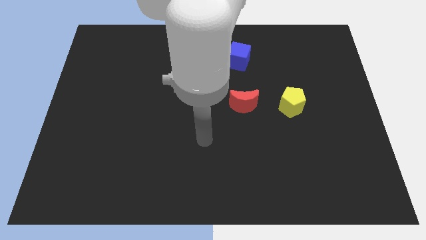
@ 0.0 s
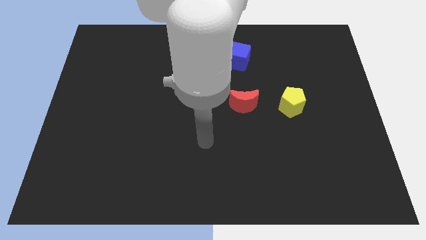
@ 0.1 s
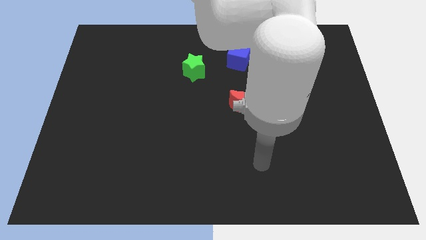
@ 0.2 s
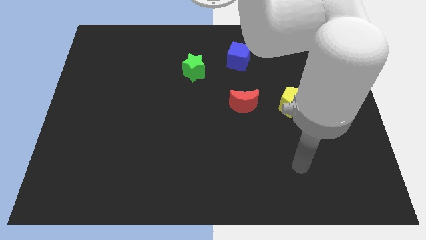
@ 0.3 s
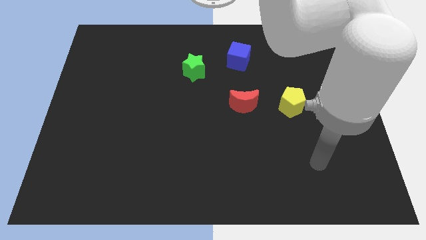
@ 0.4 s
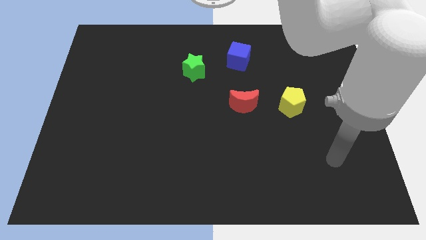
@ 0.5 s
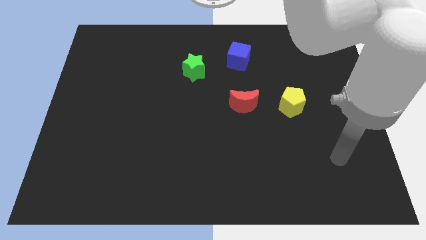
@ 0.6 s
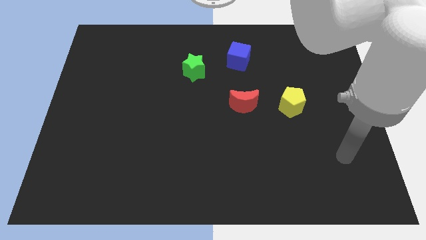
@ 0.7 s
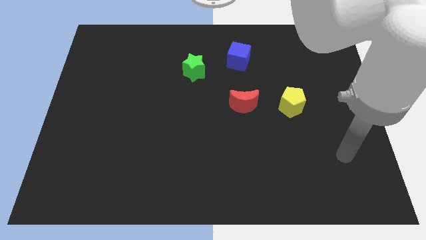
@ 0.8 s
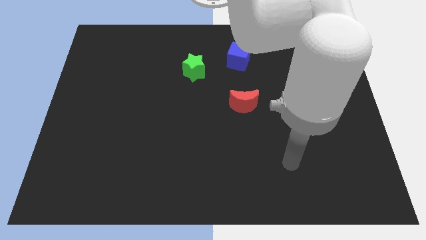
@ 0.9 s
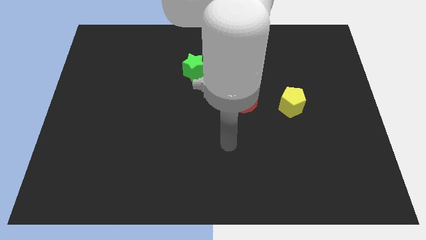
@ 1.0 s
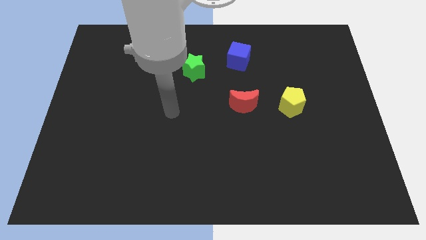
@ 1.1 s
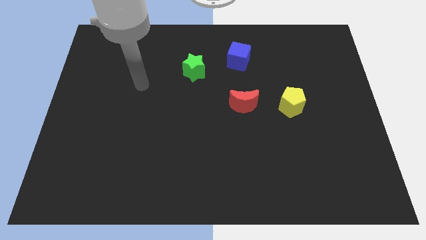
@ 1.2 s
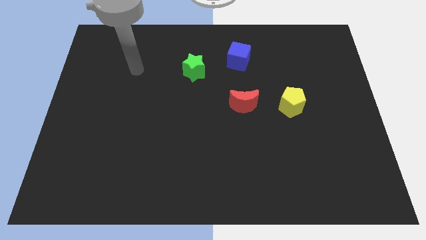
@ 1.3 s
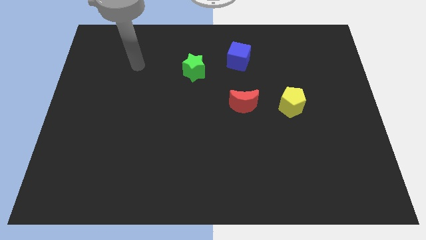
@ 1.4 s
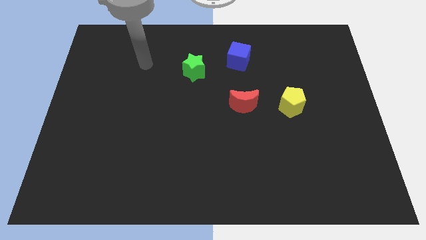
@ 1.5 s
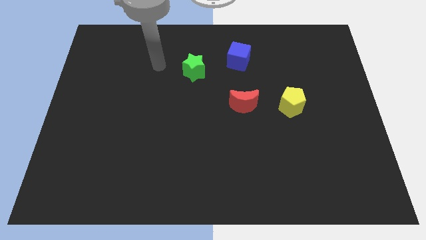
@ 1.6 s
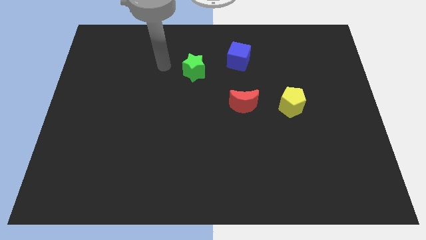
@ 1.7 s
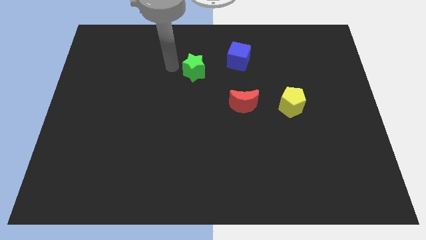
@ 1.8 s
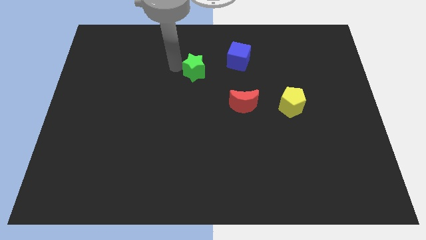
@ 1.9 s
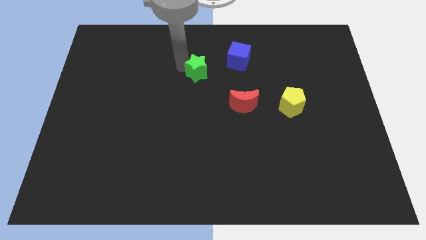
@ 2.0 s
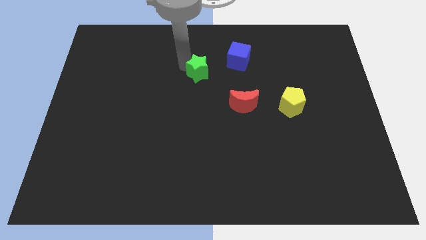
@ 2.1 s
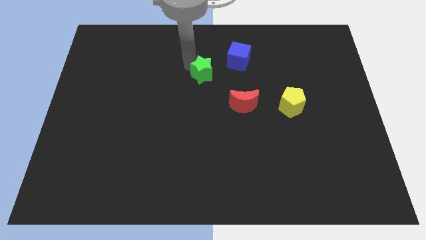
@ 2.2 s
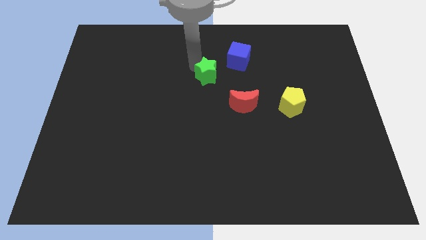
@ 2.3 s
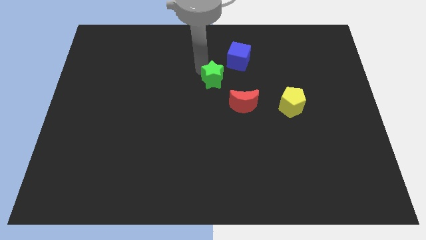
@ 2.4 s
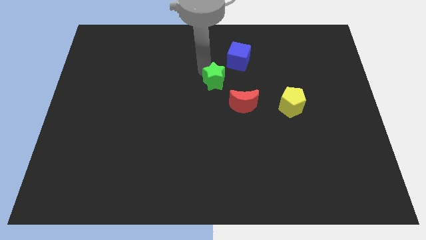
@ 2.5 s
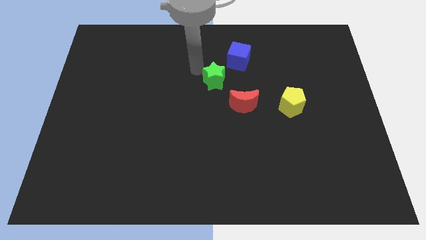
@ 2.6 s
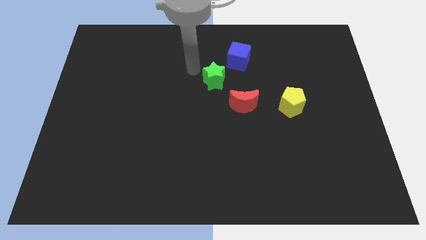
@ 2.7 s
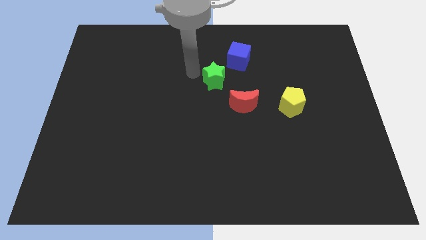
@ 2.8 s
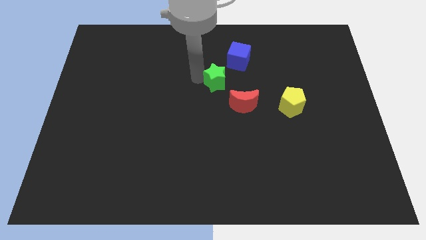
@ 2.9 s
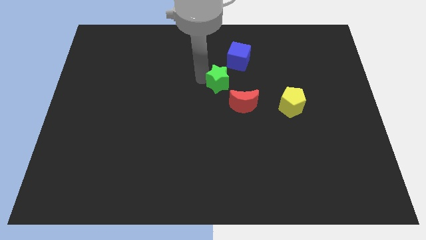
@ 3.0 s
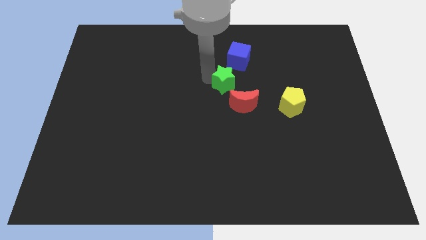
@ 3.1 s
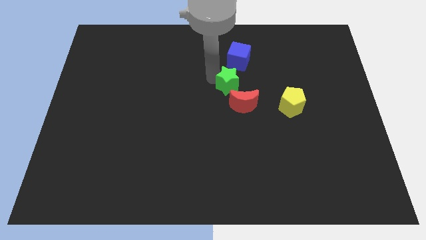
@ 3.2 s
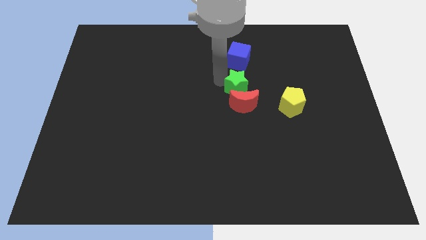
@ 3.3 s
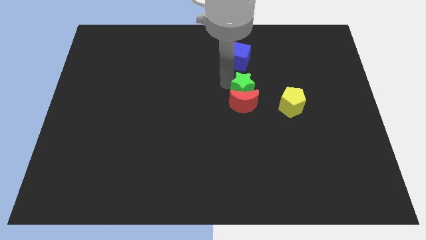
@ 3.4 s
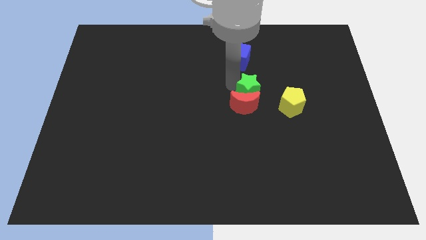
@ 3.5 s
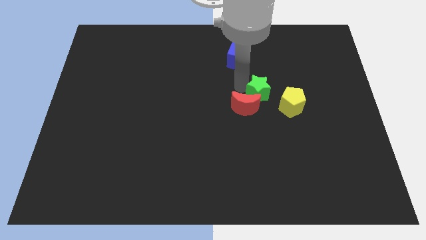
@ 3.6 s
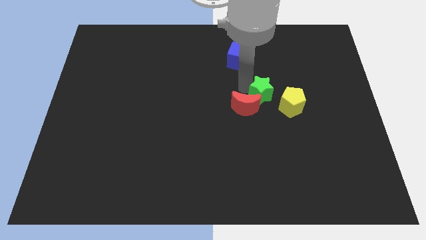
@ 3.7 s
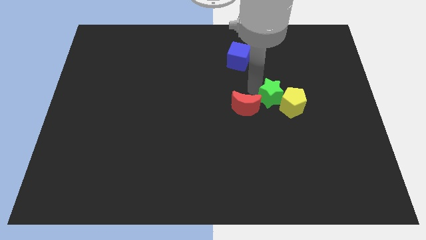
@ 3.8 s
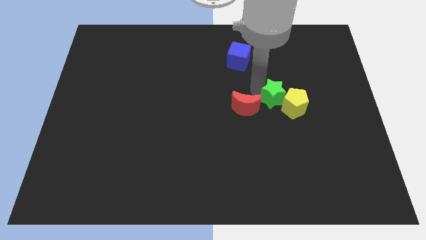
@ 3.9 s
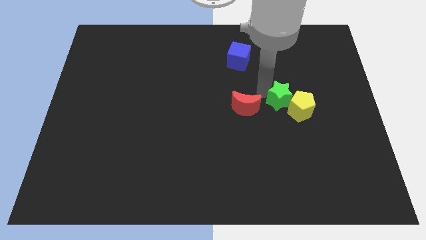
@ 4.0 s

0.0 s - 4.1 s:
slide the star close to the yellow pentagon

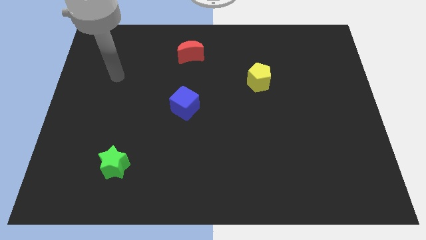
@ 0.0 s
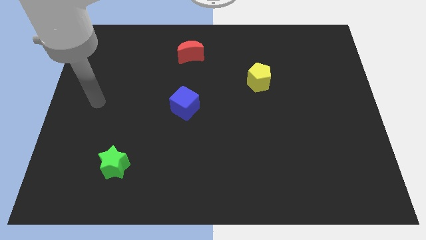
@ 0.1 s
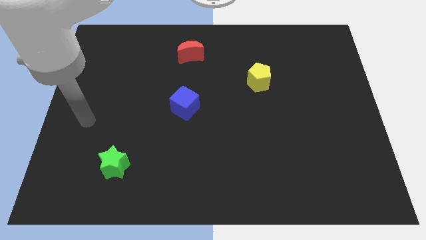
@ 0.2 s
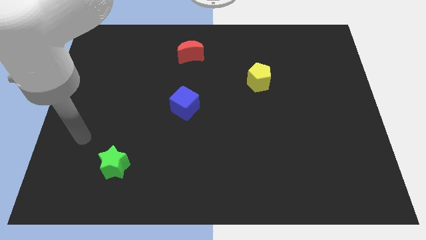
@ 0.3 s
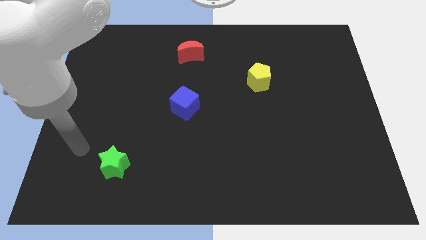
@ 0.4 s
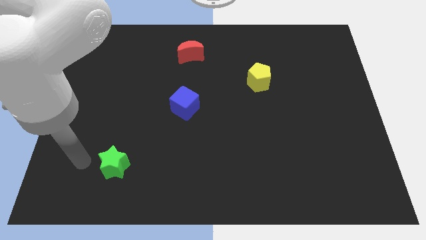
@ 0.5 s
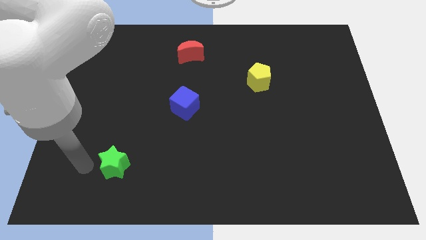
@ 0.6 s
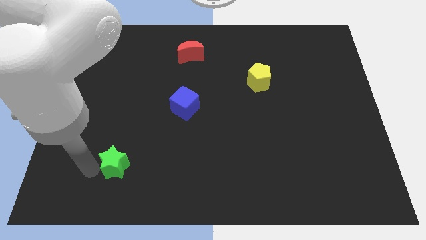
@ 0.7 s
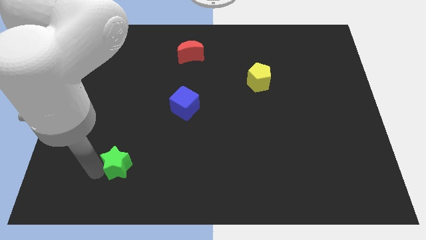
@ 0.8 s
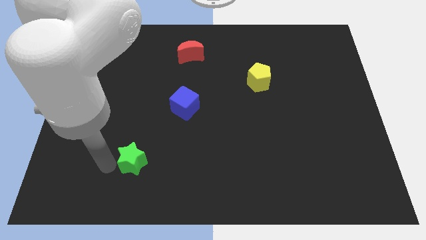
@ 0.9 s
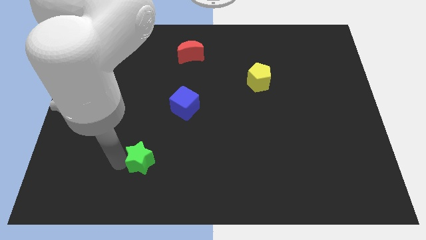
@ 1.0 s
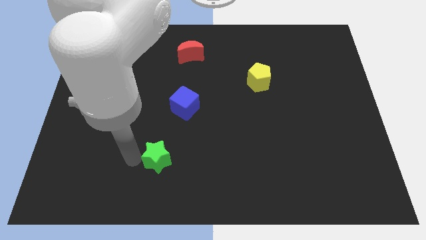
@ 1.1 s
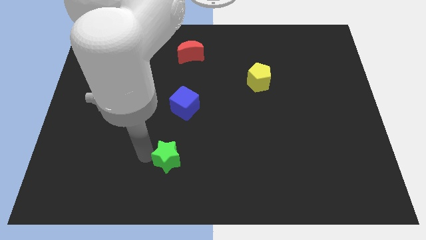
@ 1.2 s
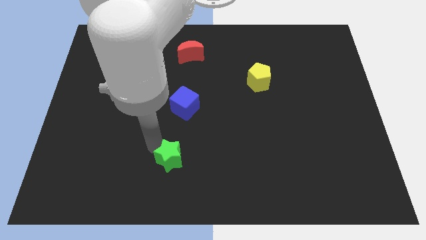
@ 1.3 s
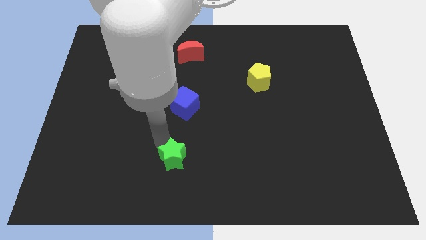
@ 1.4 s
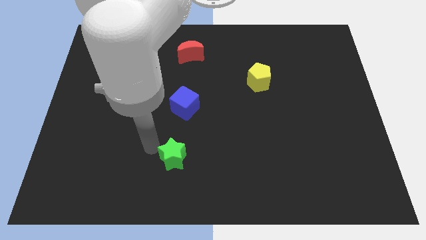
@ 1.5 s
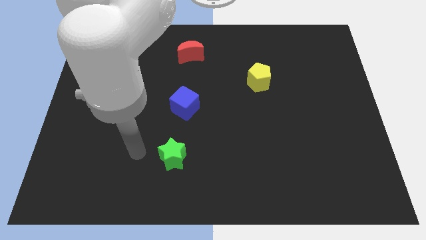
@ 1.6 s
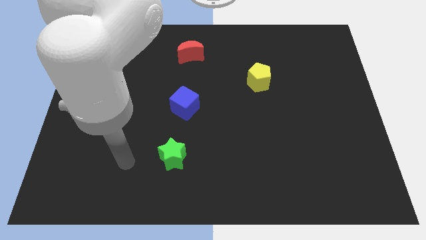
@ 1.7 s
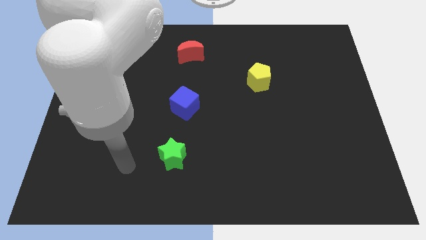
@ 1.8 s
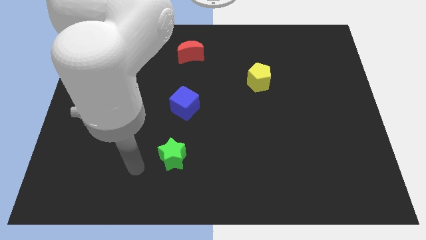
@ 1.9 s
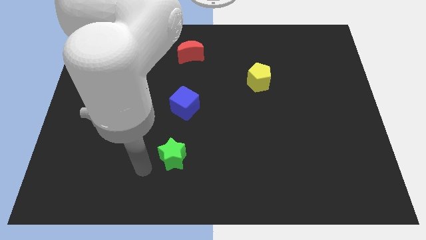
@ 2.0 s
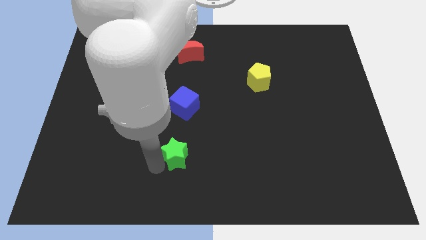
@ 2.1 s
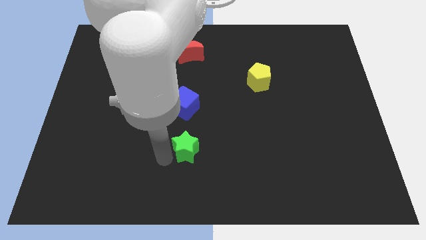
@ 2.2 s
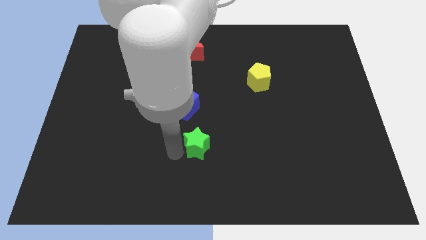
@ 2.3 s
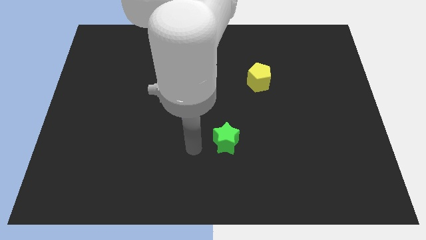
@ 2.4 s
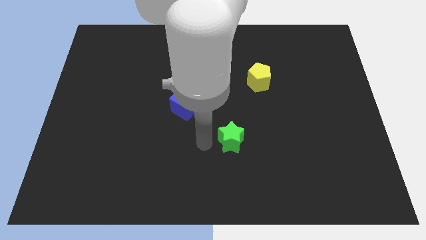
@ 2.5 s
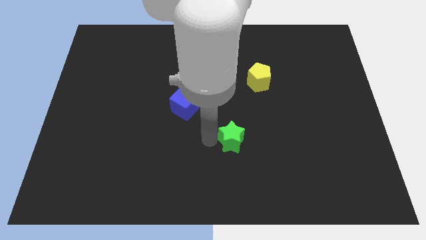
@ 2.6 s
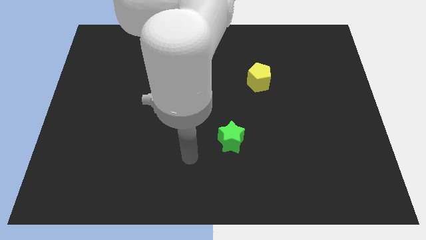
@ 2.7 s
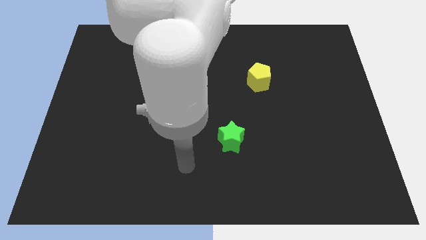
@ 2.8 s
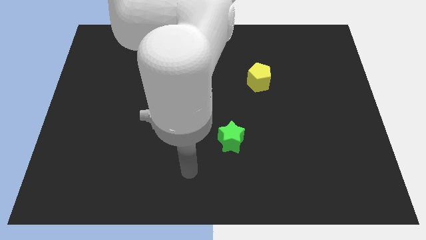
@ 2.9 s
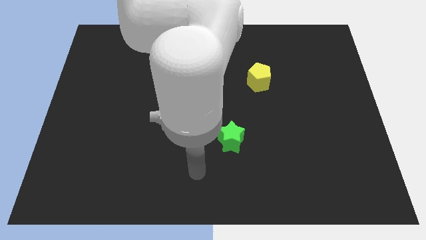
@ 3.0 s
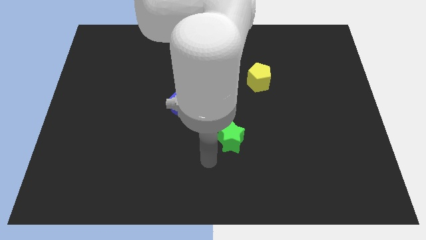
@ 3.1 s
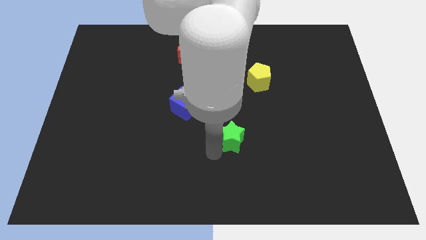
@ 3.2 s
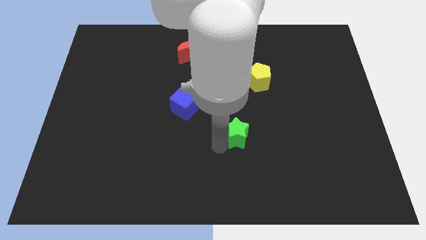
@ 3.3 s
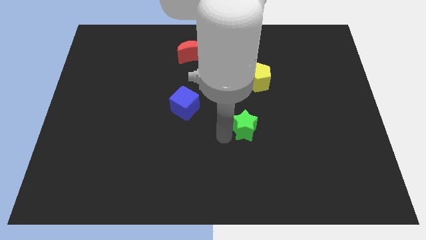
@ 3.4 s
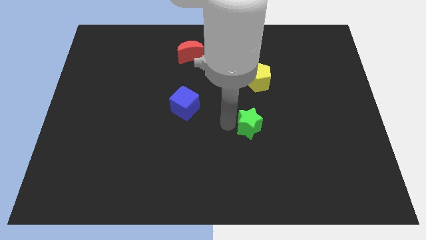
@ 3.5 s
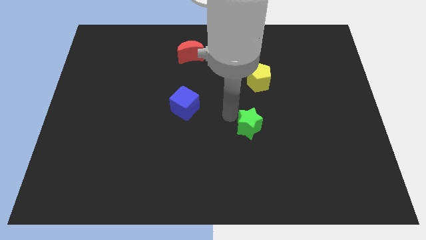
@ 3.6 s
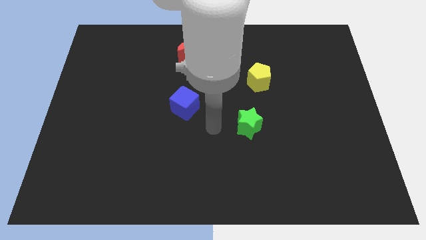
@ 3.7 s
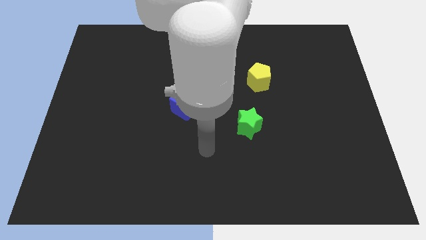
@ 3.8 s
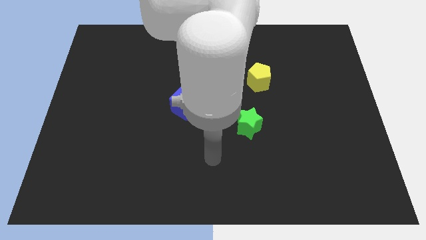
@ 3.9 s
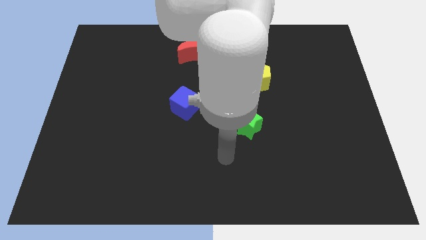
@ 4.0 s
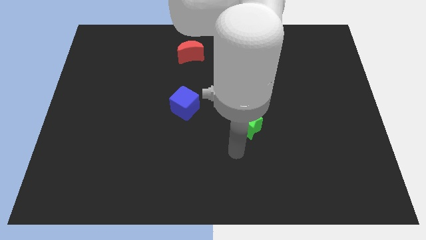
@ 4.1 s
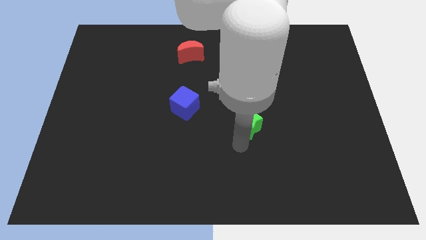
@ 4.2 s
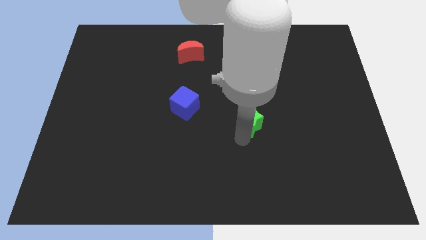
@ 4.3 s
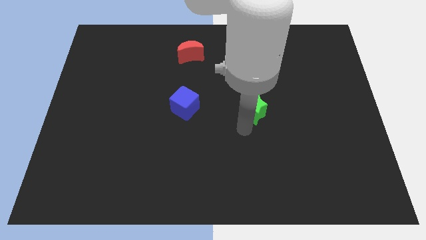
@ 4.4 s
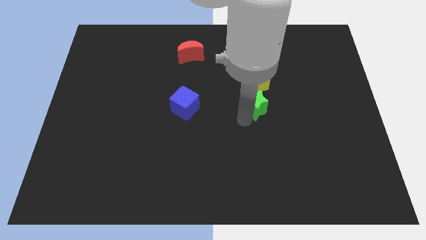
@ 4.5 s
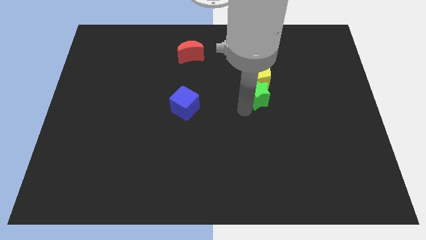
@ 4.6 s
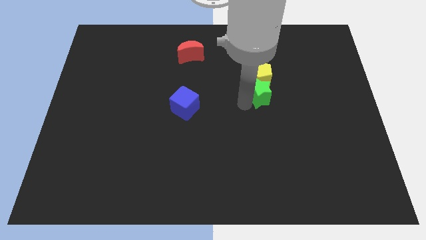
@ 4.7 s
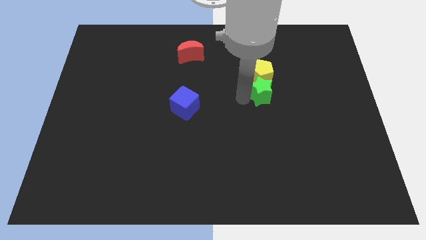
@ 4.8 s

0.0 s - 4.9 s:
push the green star towards the yellow block
